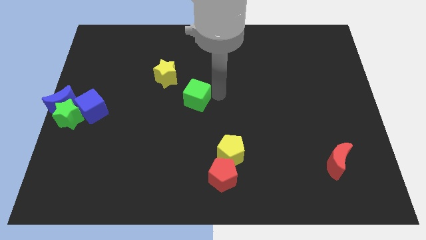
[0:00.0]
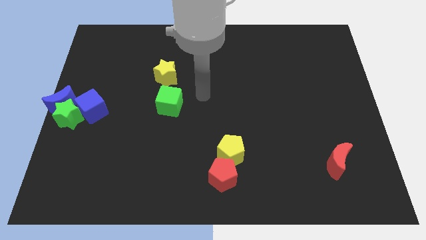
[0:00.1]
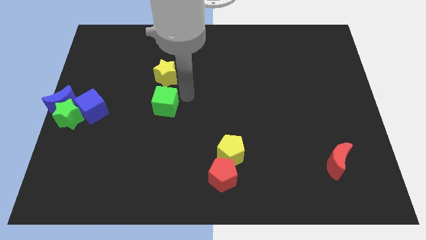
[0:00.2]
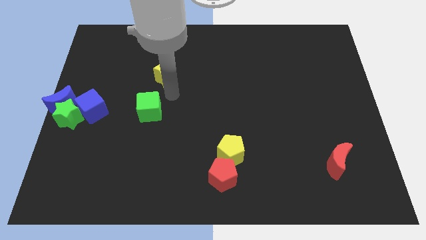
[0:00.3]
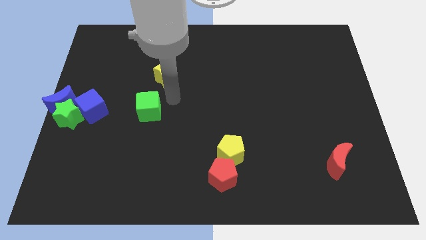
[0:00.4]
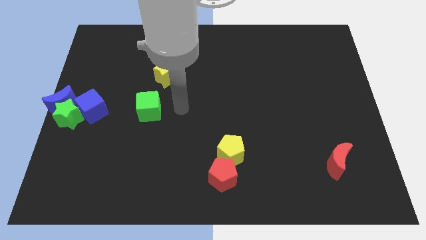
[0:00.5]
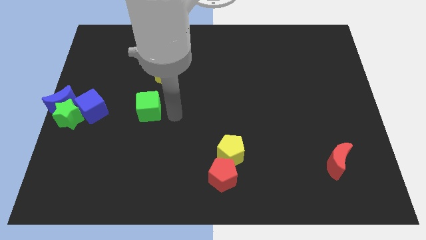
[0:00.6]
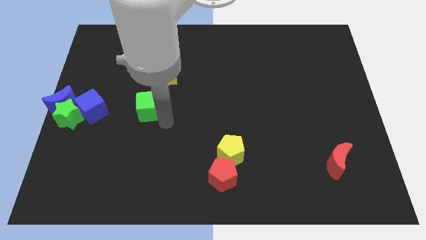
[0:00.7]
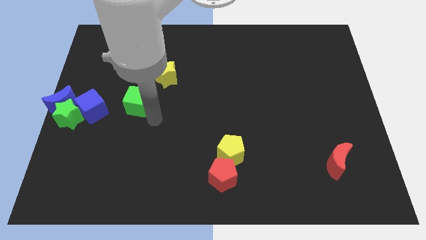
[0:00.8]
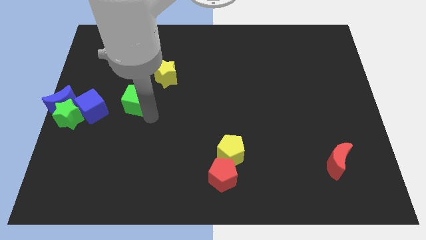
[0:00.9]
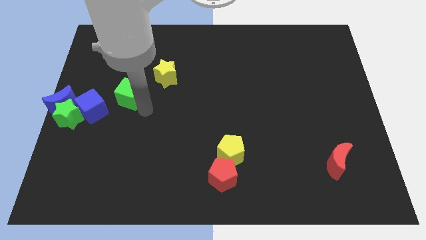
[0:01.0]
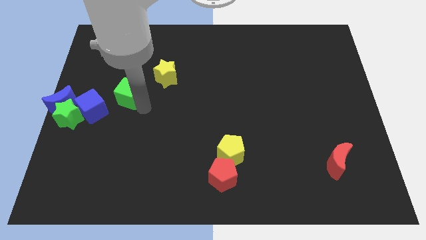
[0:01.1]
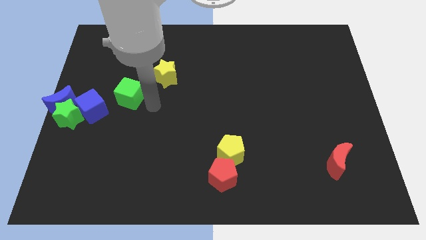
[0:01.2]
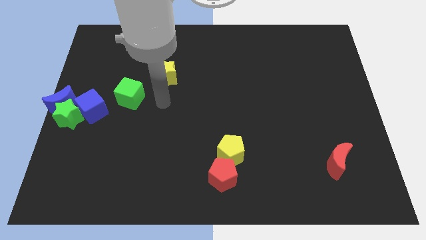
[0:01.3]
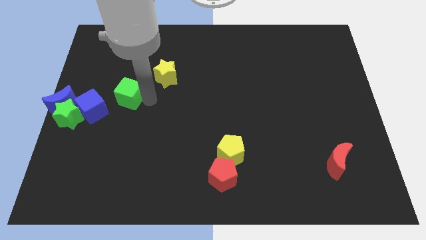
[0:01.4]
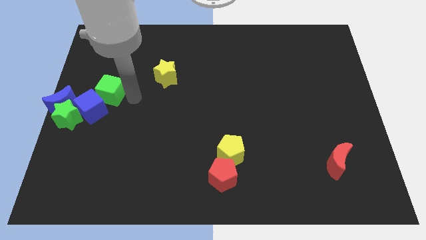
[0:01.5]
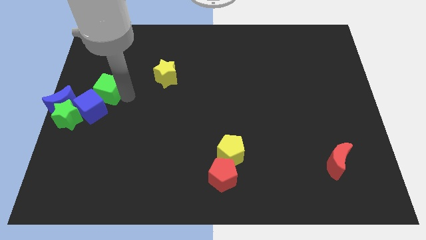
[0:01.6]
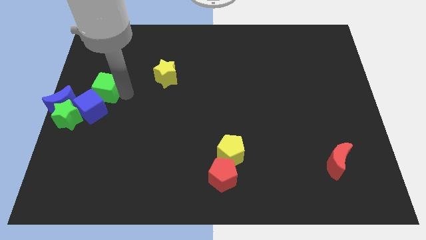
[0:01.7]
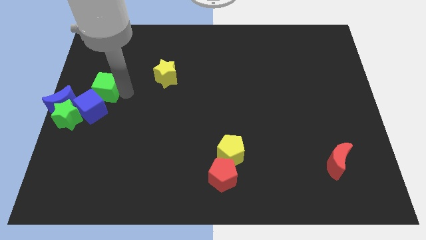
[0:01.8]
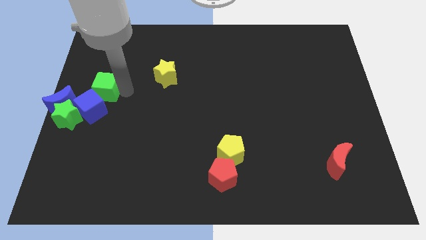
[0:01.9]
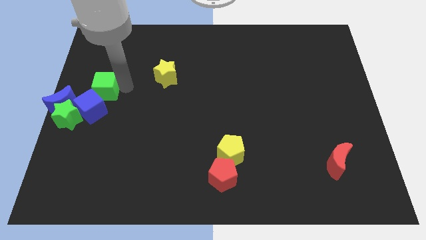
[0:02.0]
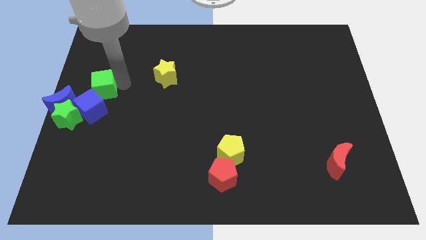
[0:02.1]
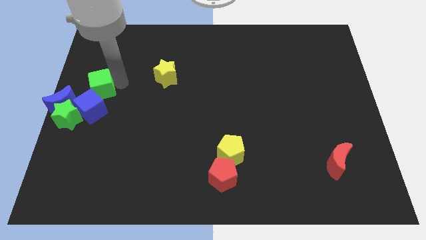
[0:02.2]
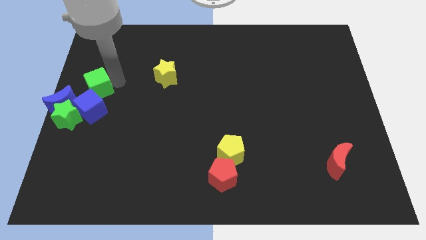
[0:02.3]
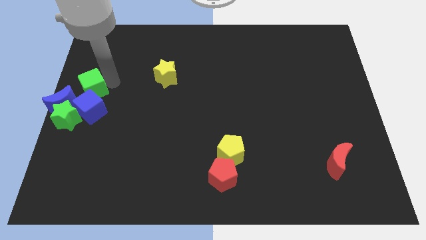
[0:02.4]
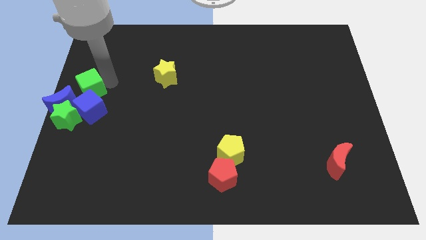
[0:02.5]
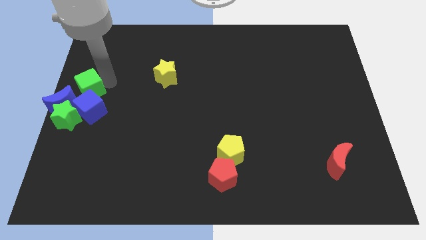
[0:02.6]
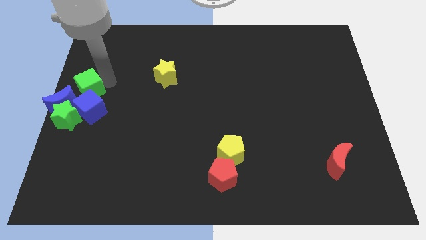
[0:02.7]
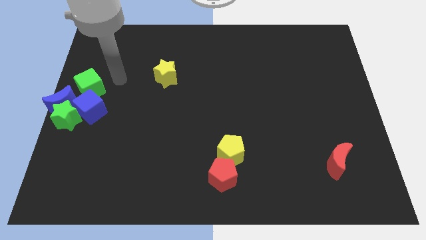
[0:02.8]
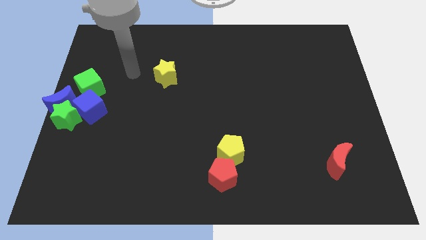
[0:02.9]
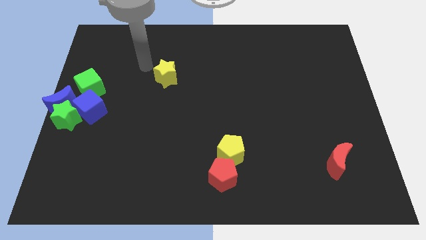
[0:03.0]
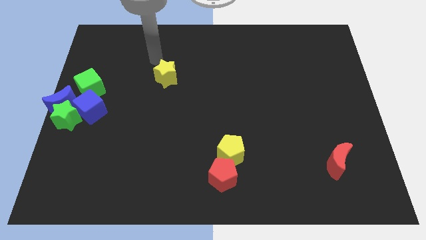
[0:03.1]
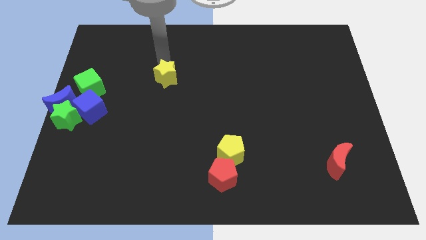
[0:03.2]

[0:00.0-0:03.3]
move the green cube to the top left side of the blue cube

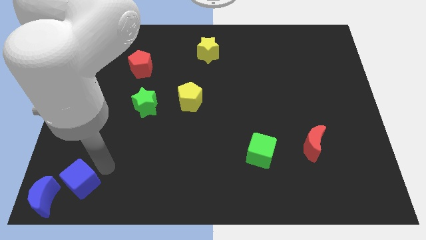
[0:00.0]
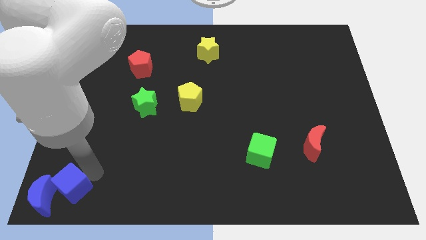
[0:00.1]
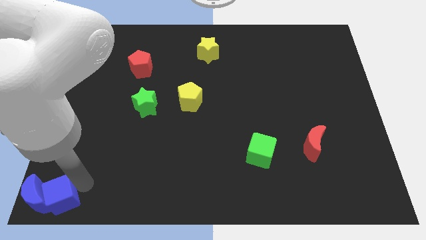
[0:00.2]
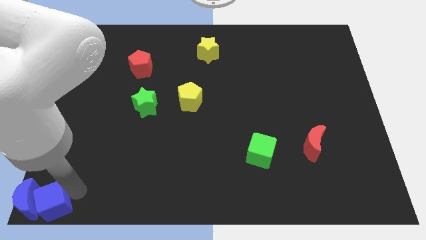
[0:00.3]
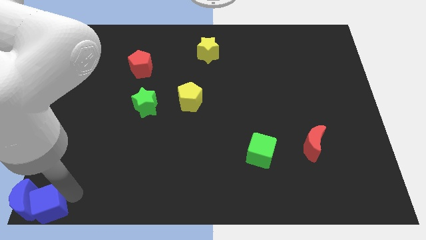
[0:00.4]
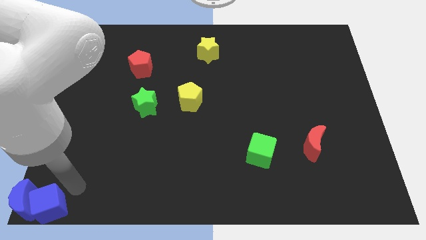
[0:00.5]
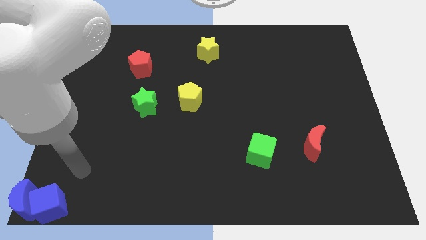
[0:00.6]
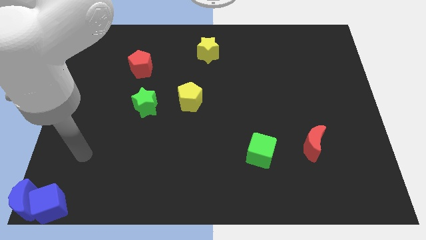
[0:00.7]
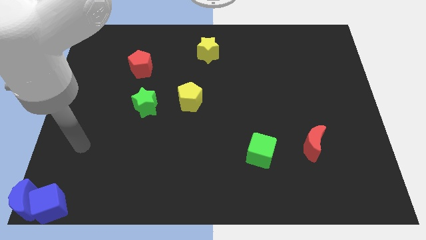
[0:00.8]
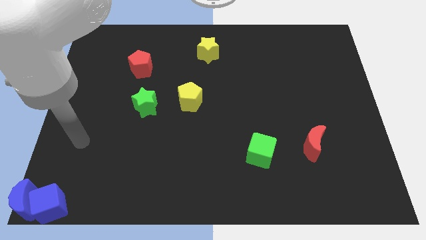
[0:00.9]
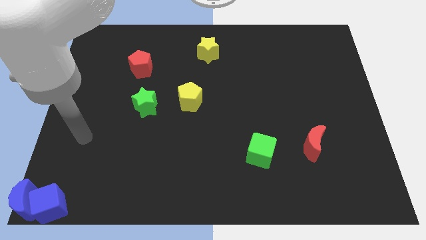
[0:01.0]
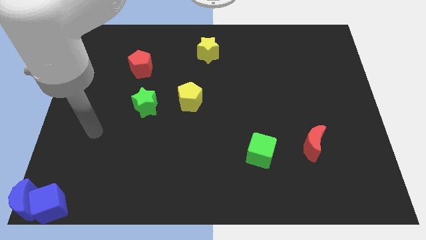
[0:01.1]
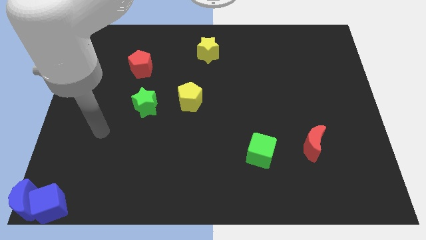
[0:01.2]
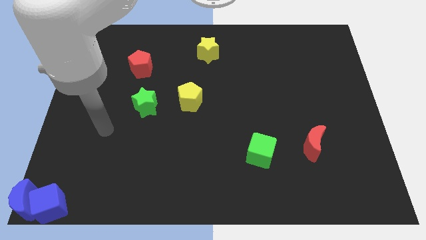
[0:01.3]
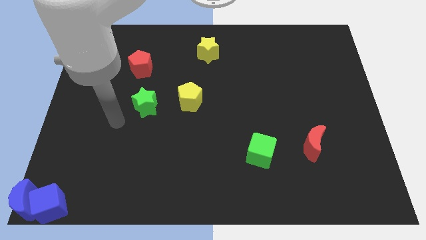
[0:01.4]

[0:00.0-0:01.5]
place the blue cube right to the blue crescent

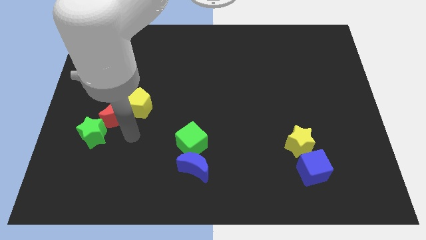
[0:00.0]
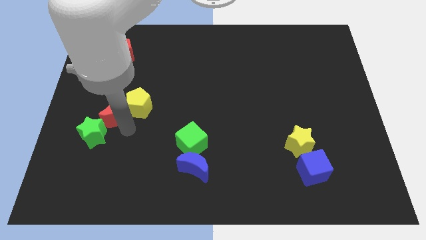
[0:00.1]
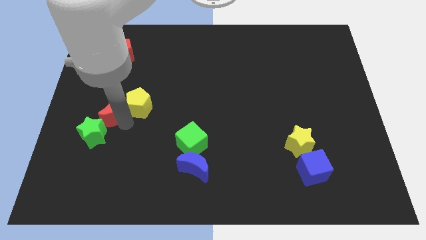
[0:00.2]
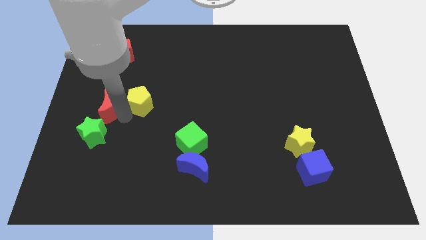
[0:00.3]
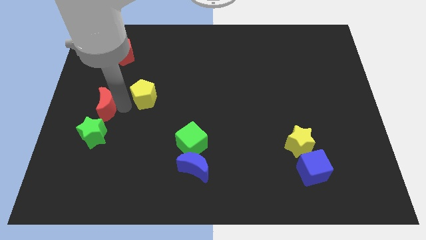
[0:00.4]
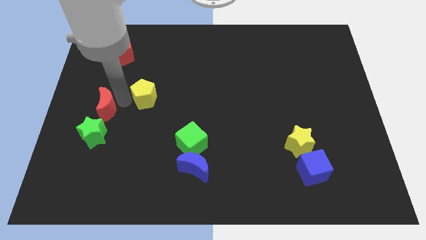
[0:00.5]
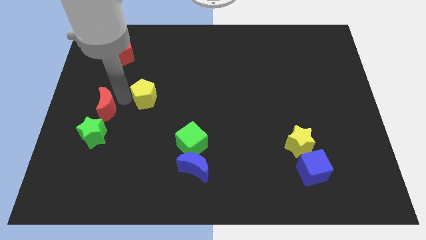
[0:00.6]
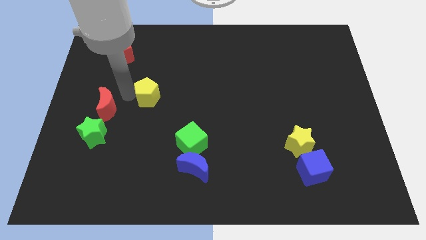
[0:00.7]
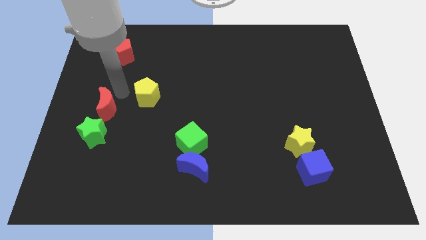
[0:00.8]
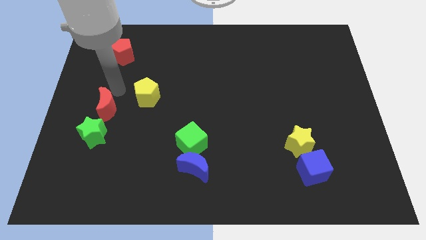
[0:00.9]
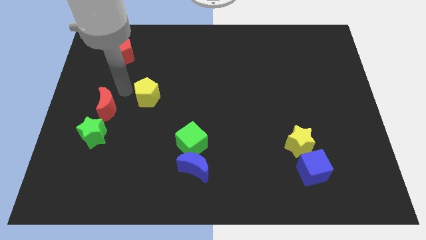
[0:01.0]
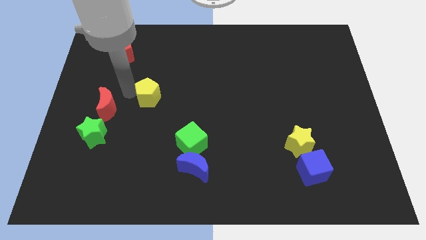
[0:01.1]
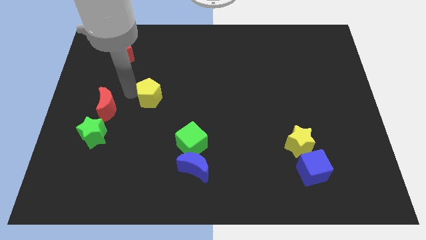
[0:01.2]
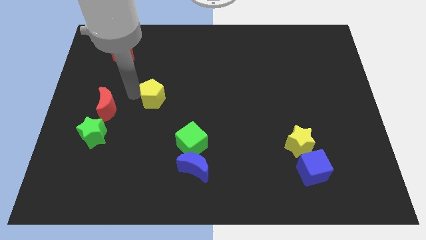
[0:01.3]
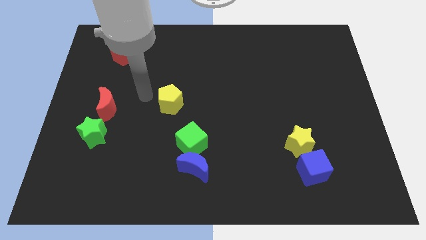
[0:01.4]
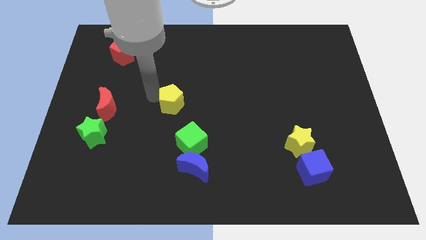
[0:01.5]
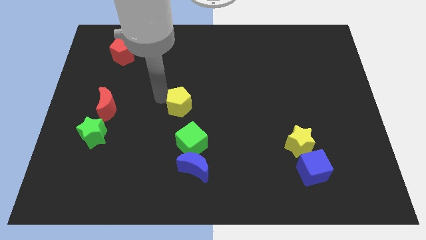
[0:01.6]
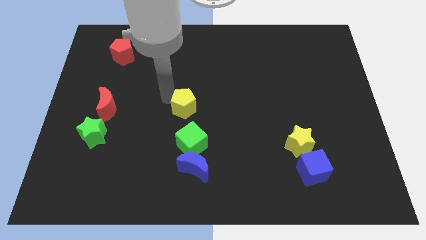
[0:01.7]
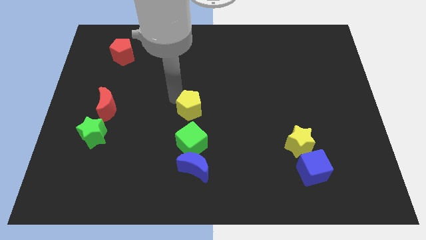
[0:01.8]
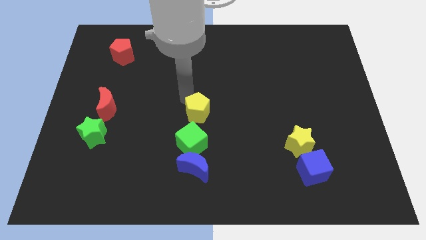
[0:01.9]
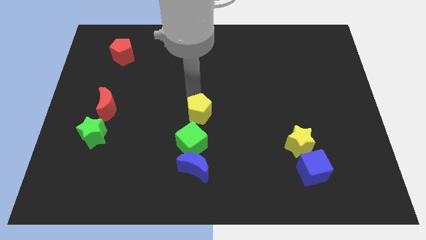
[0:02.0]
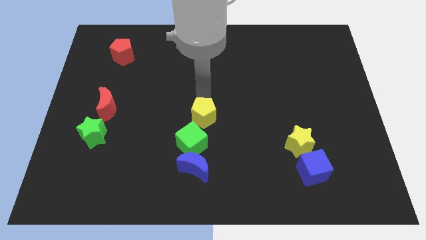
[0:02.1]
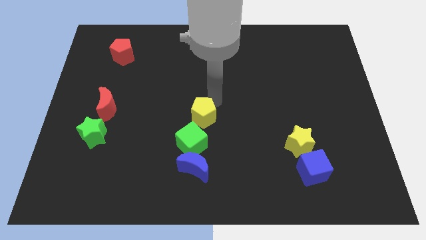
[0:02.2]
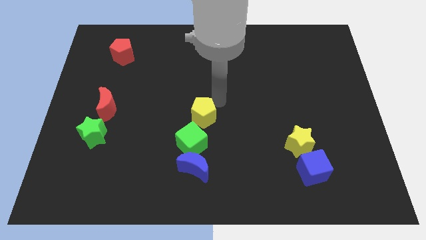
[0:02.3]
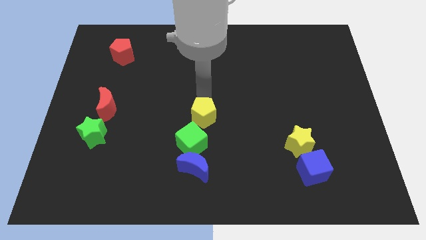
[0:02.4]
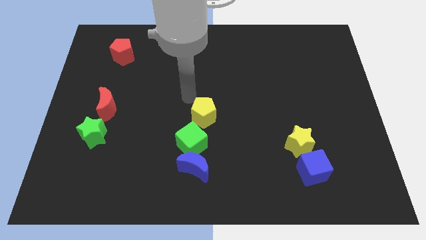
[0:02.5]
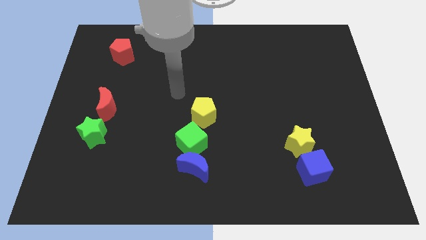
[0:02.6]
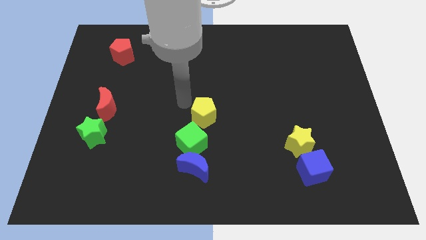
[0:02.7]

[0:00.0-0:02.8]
separate the yellow pentagon towards top of green cube

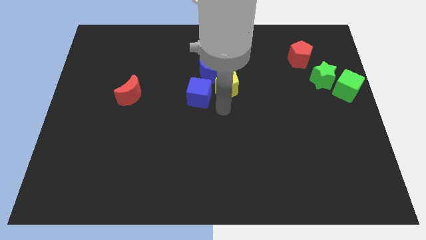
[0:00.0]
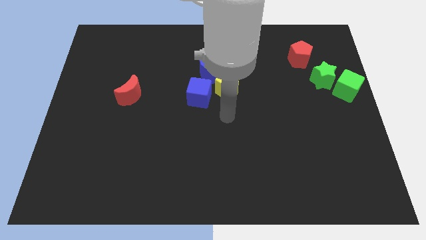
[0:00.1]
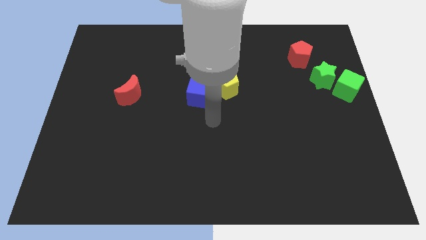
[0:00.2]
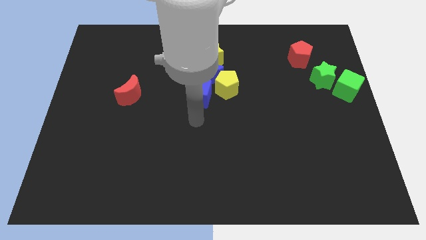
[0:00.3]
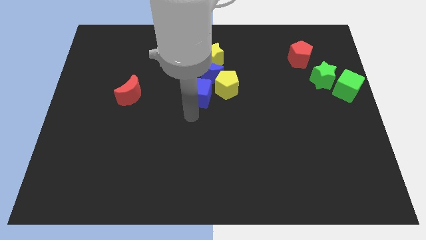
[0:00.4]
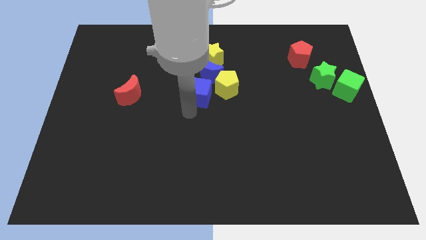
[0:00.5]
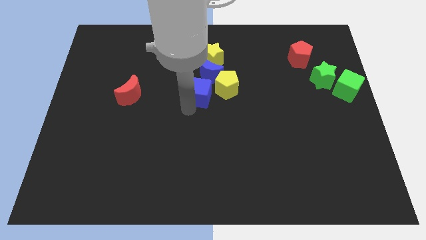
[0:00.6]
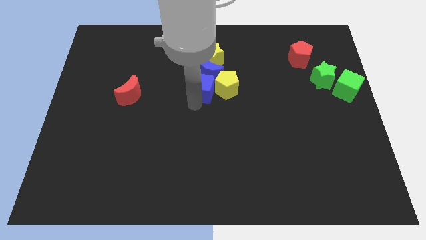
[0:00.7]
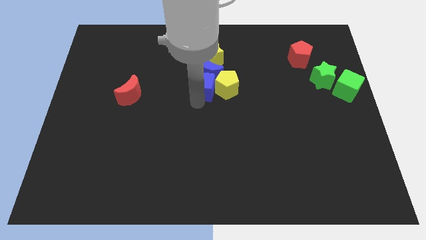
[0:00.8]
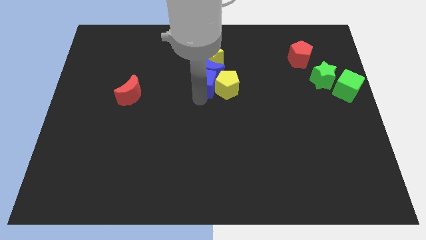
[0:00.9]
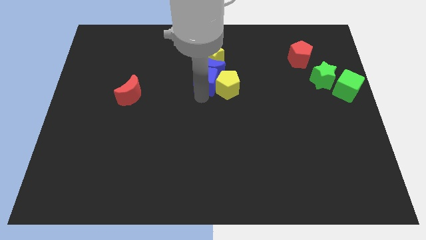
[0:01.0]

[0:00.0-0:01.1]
push the blue cube into the blue moon

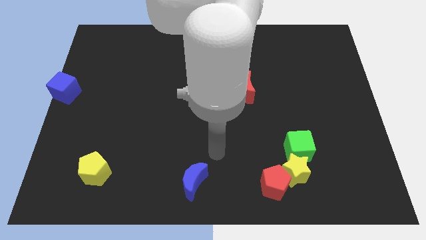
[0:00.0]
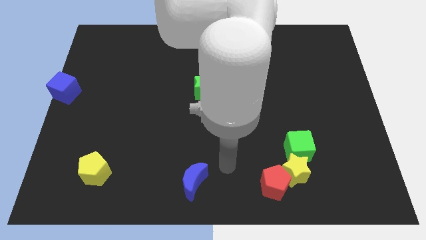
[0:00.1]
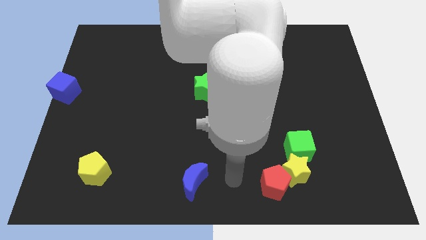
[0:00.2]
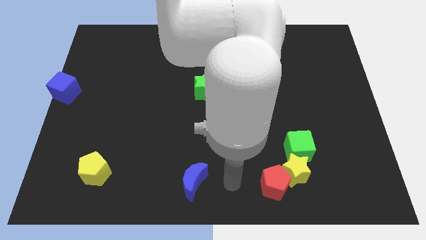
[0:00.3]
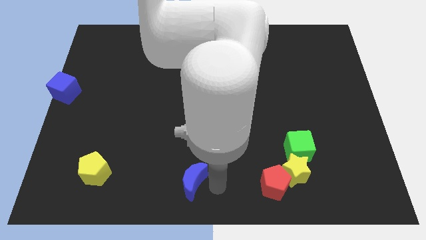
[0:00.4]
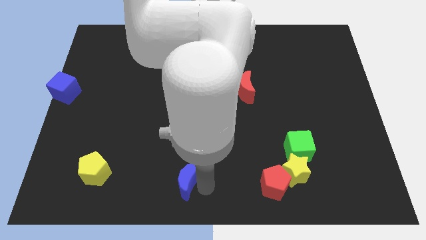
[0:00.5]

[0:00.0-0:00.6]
place arm on right side of blue moon
